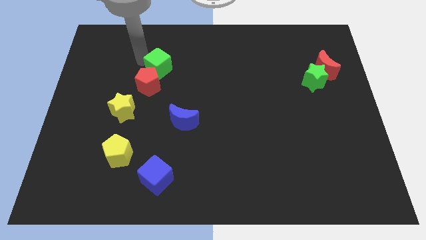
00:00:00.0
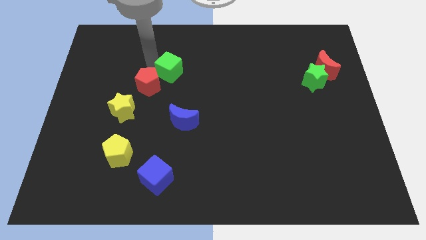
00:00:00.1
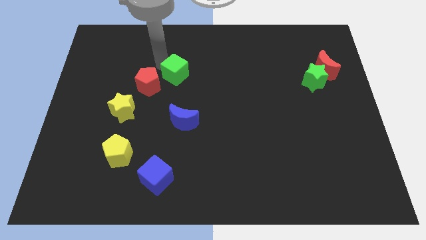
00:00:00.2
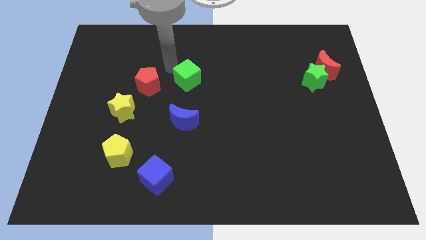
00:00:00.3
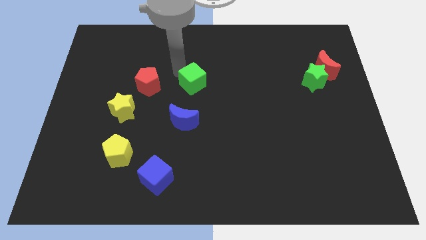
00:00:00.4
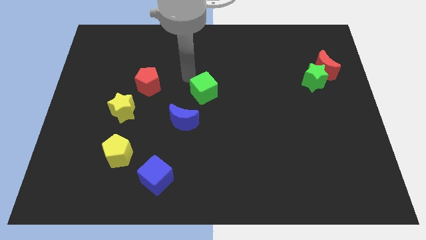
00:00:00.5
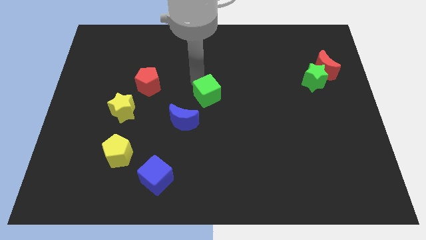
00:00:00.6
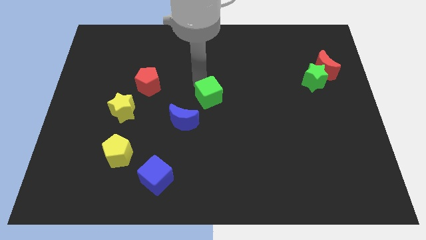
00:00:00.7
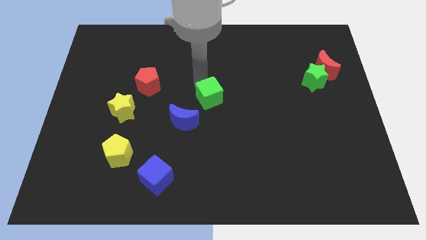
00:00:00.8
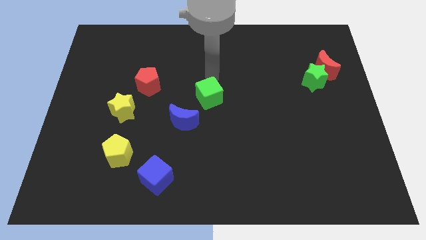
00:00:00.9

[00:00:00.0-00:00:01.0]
move green cube right above the blue moon

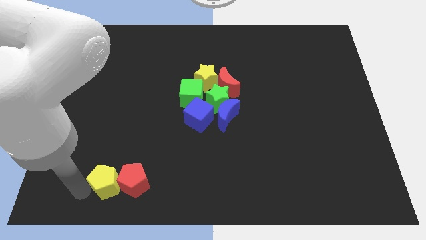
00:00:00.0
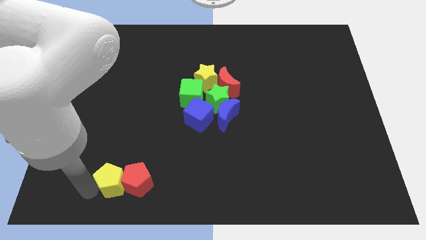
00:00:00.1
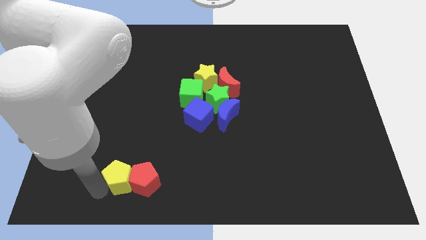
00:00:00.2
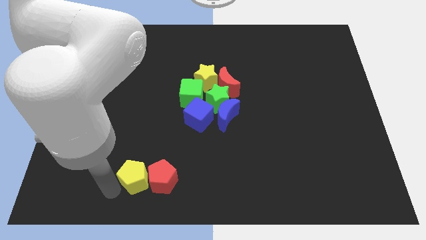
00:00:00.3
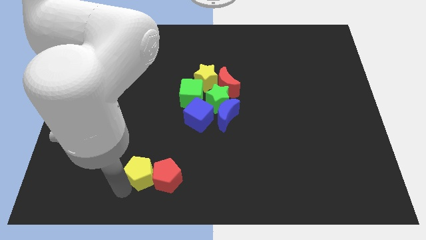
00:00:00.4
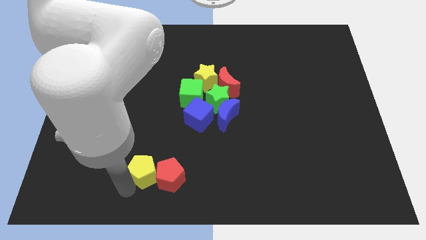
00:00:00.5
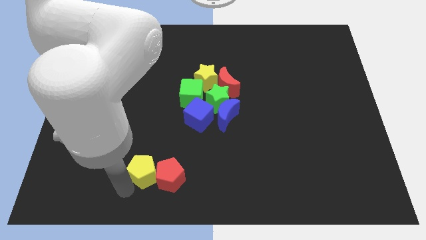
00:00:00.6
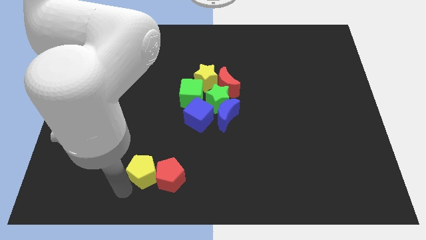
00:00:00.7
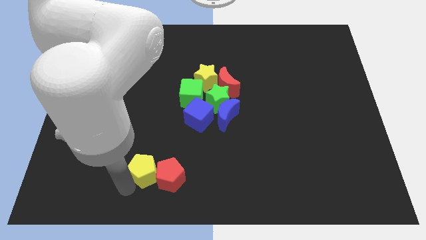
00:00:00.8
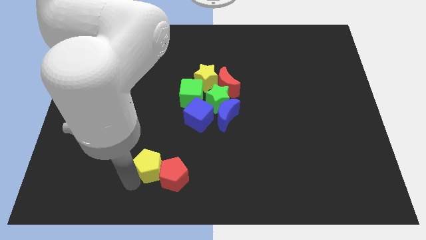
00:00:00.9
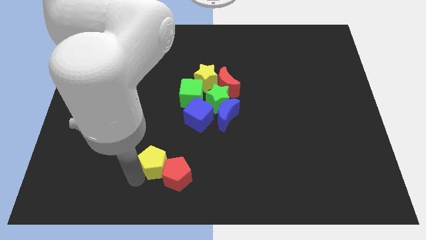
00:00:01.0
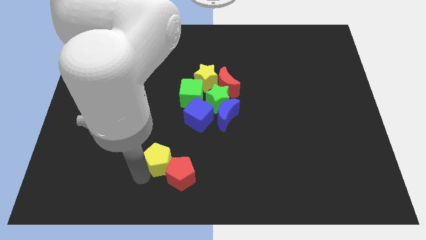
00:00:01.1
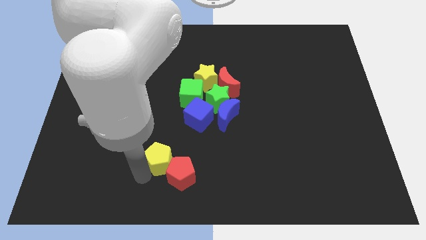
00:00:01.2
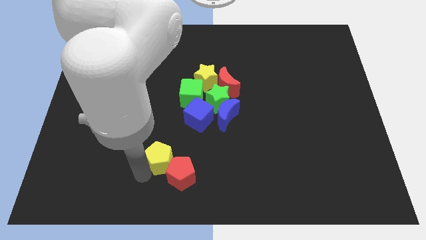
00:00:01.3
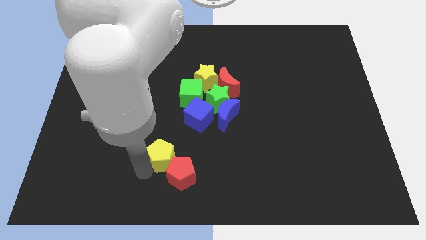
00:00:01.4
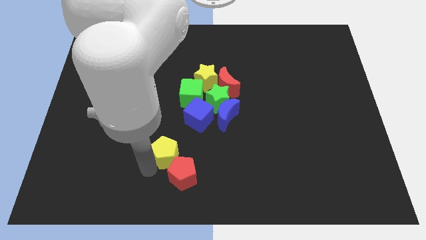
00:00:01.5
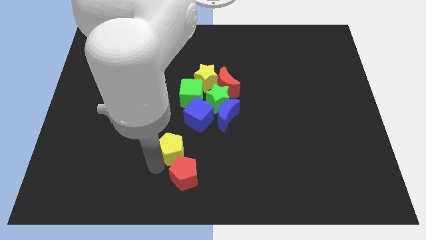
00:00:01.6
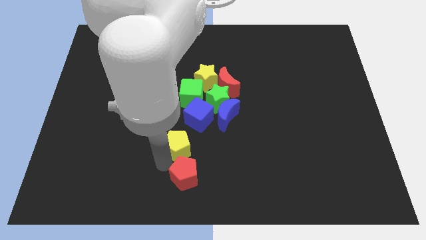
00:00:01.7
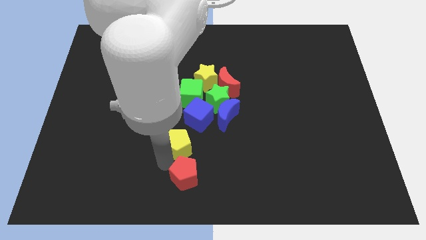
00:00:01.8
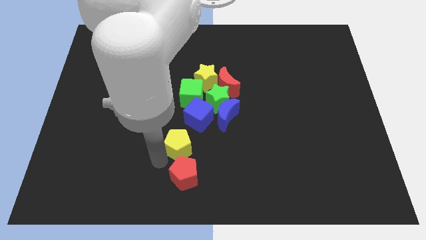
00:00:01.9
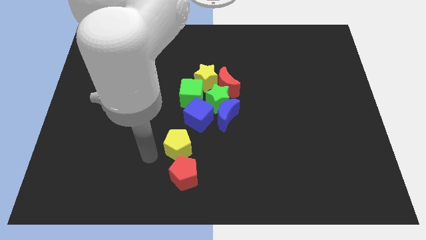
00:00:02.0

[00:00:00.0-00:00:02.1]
push yellow pentagon into the red pentagon

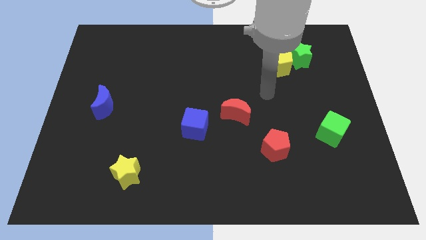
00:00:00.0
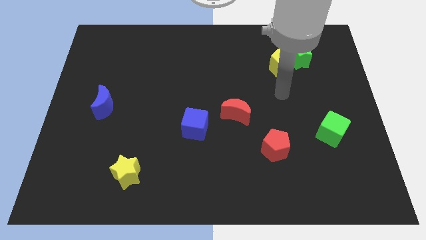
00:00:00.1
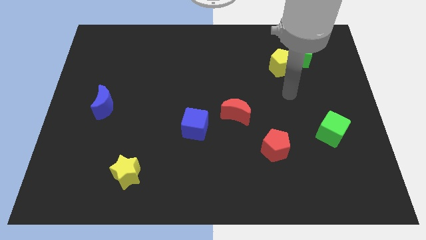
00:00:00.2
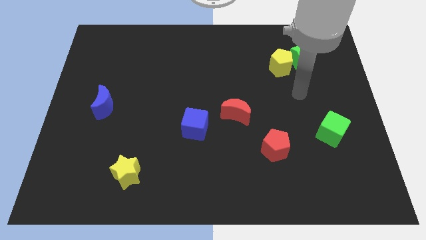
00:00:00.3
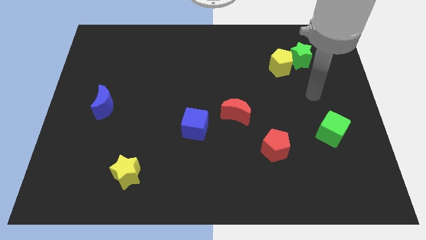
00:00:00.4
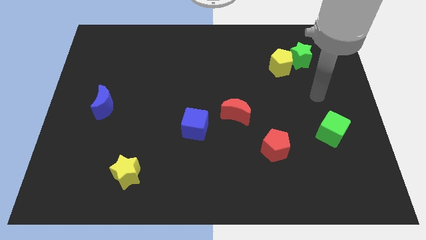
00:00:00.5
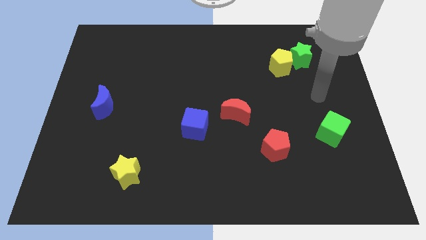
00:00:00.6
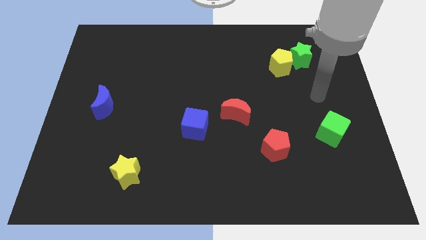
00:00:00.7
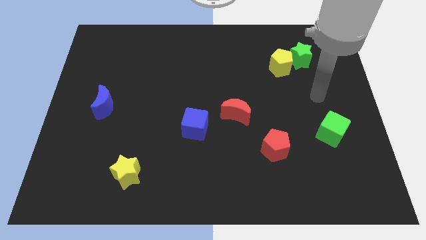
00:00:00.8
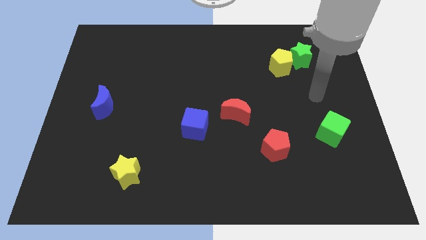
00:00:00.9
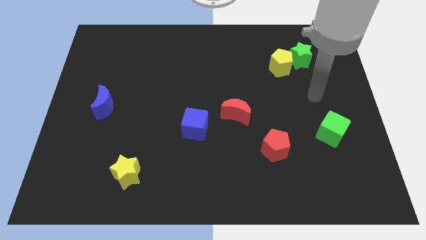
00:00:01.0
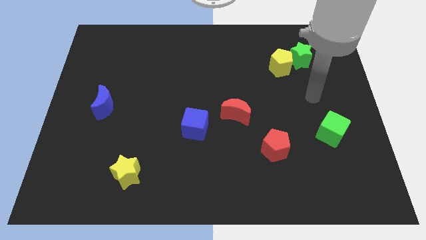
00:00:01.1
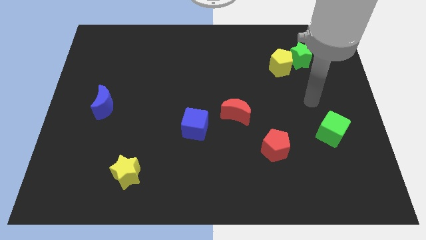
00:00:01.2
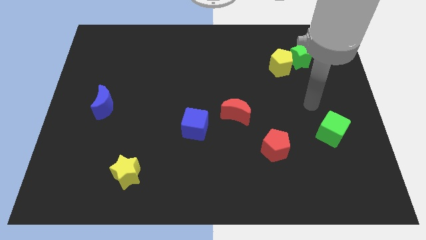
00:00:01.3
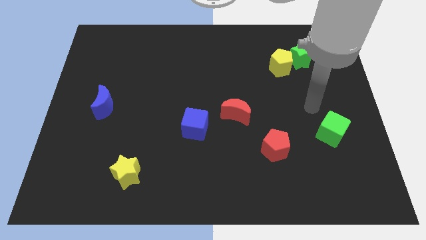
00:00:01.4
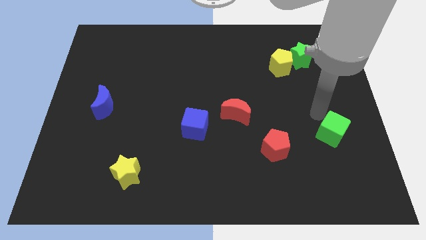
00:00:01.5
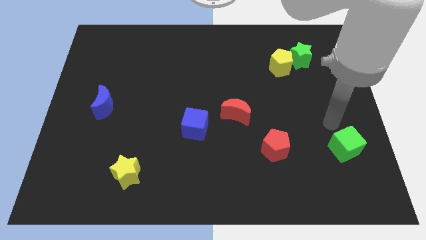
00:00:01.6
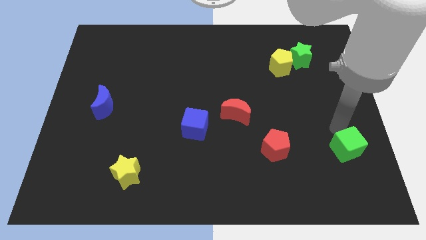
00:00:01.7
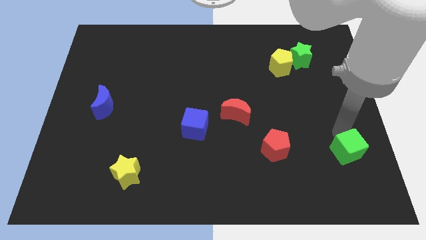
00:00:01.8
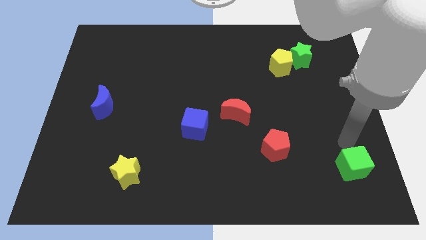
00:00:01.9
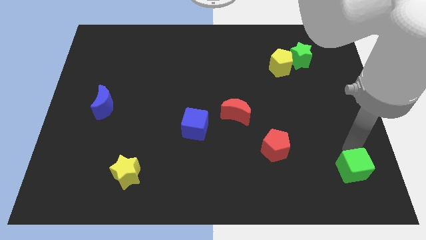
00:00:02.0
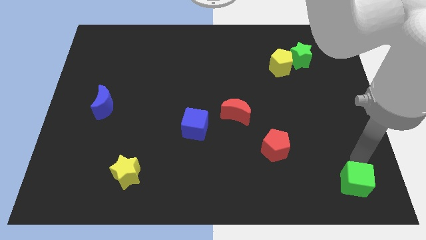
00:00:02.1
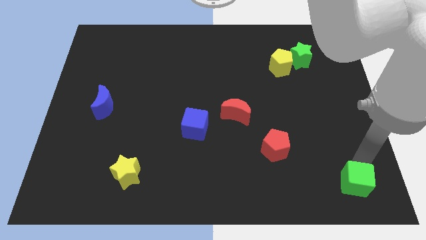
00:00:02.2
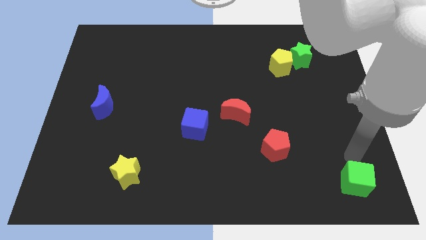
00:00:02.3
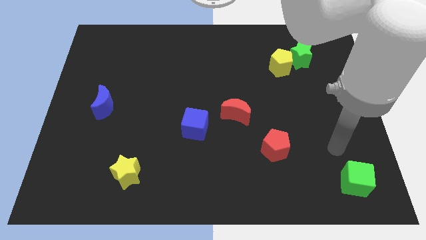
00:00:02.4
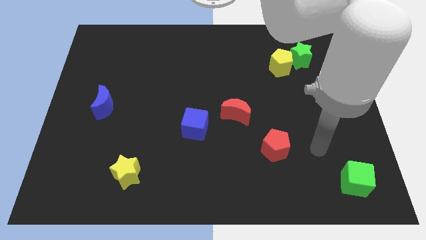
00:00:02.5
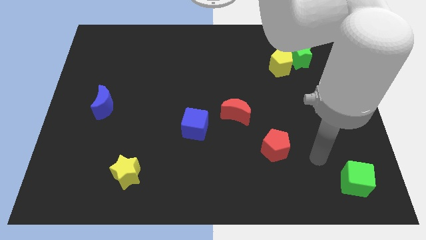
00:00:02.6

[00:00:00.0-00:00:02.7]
move the green cube to the bottom right diagonal of the red pentagon

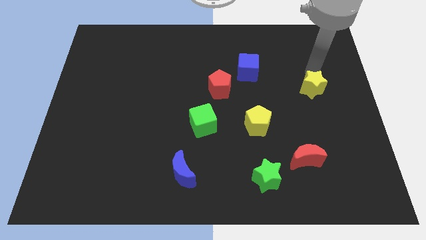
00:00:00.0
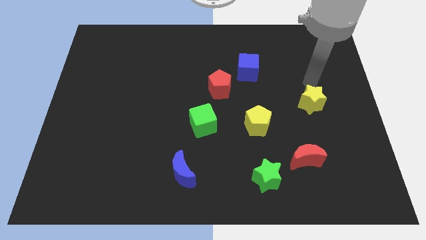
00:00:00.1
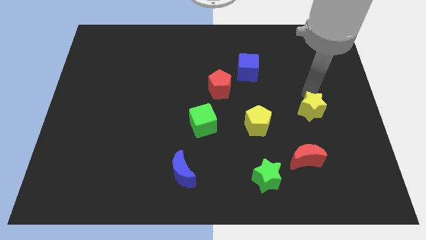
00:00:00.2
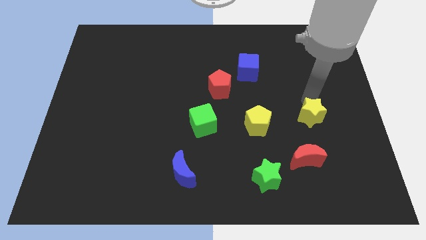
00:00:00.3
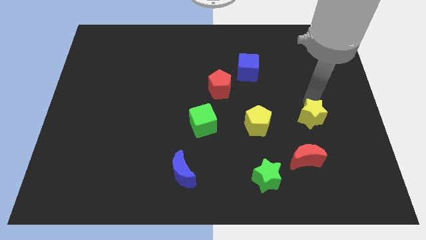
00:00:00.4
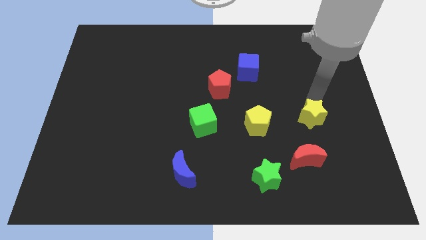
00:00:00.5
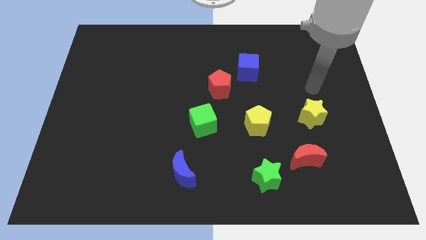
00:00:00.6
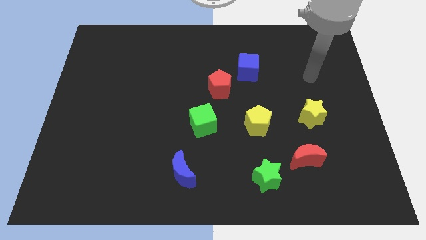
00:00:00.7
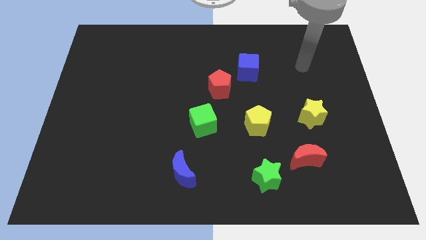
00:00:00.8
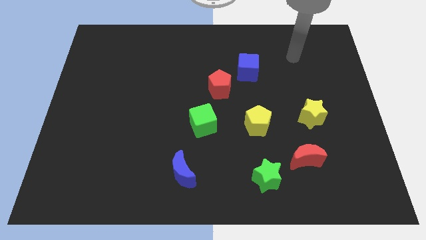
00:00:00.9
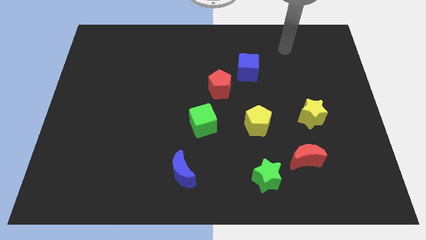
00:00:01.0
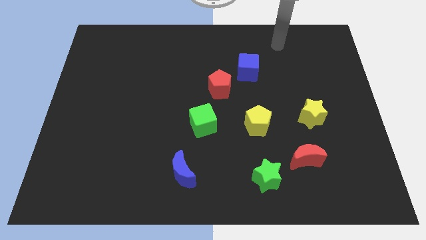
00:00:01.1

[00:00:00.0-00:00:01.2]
push yellow star slightly towards red moon

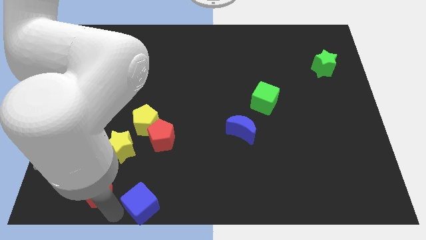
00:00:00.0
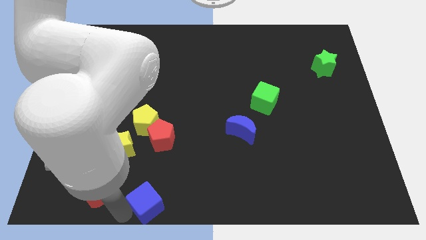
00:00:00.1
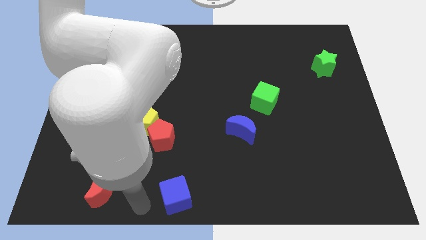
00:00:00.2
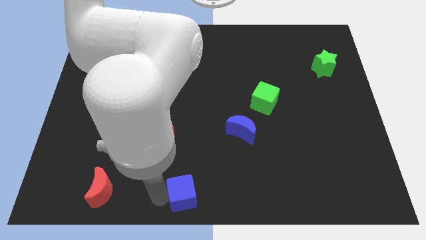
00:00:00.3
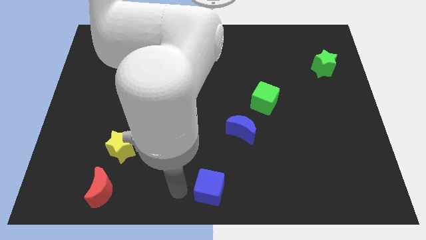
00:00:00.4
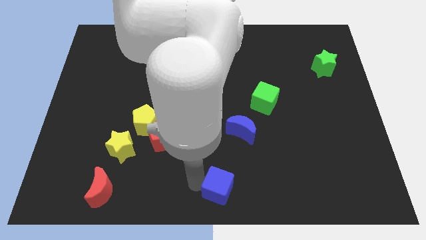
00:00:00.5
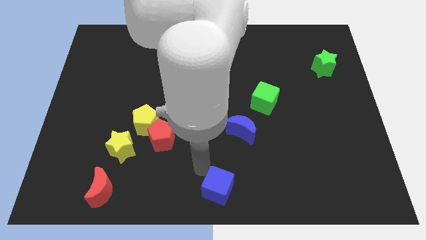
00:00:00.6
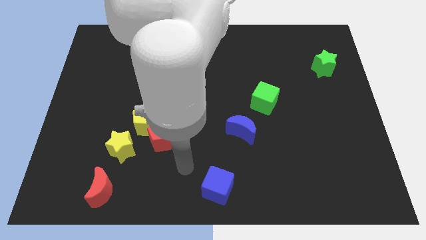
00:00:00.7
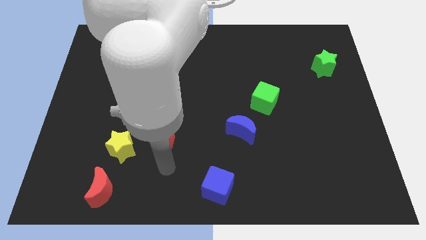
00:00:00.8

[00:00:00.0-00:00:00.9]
place the blue cube in front of bottom center

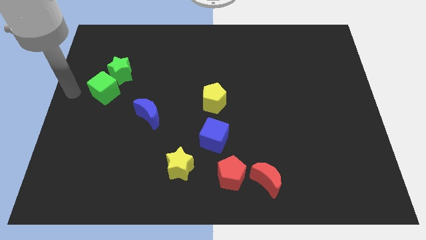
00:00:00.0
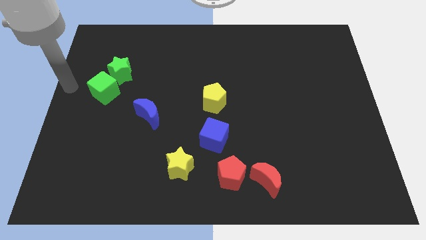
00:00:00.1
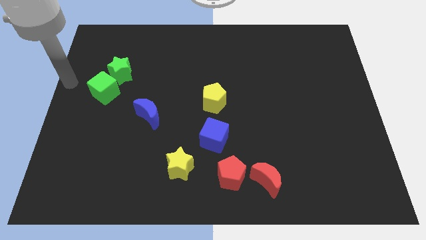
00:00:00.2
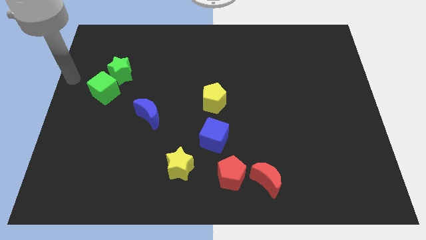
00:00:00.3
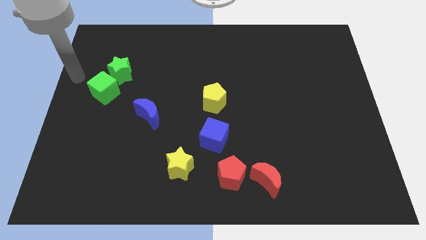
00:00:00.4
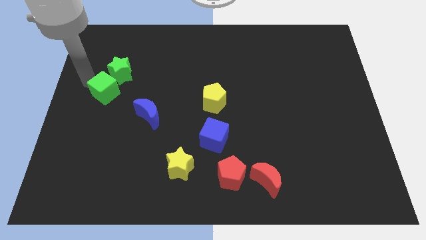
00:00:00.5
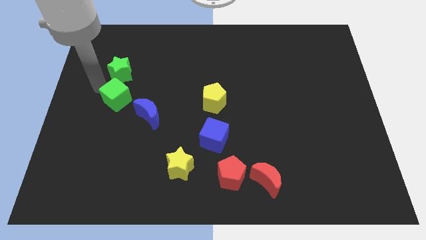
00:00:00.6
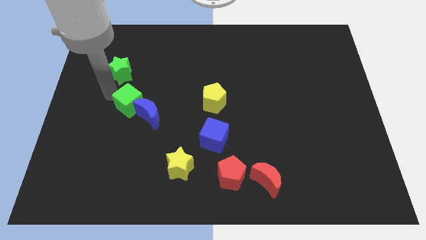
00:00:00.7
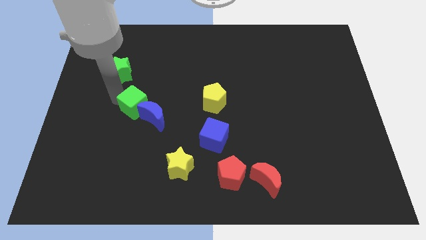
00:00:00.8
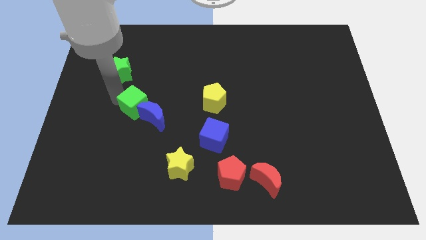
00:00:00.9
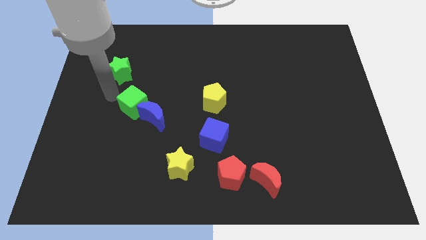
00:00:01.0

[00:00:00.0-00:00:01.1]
move the green cube into the blue crescent
